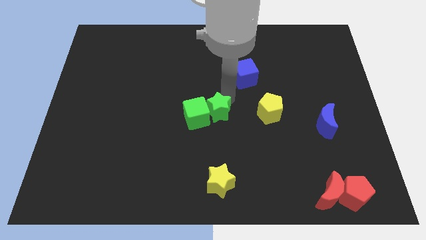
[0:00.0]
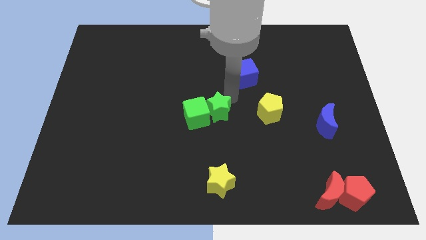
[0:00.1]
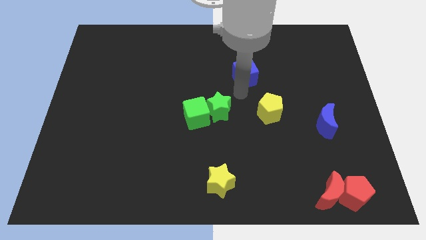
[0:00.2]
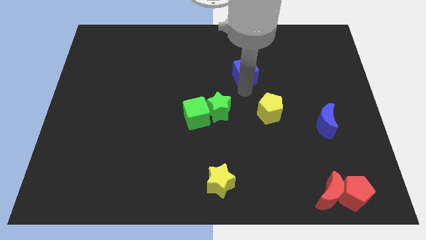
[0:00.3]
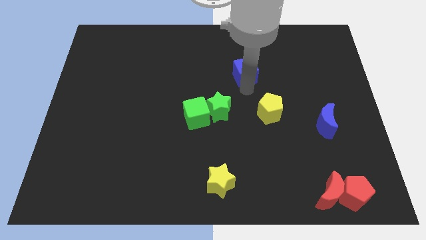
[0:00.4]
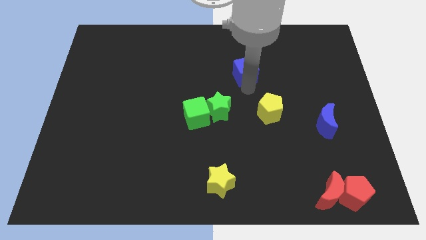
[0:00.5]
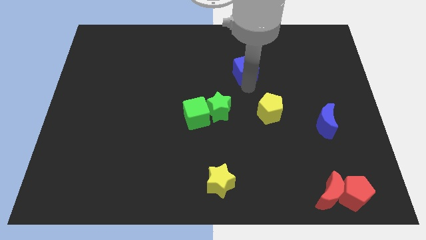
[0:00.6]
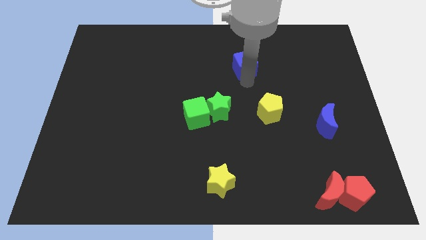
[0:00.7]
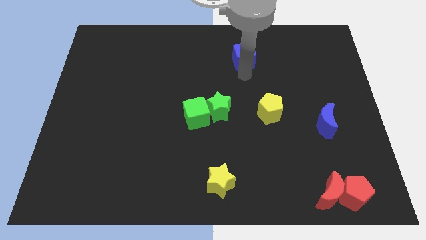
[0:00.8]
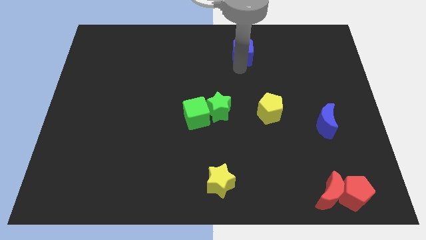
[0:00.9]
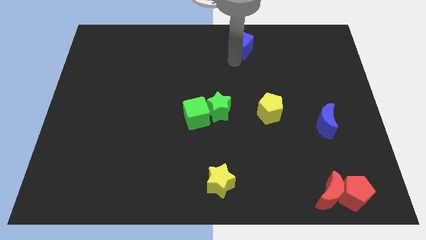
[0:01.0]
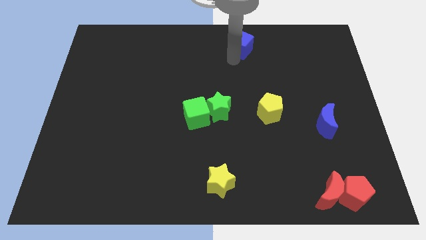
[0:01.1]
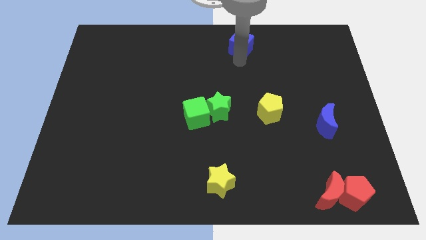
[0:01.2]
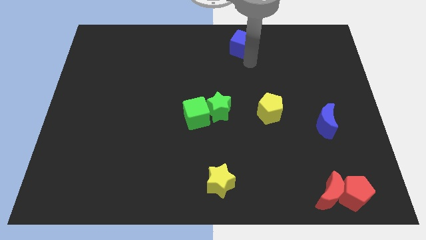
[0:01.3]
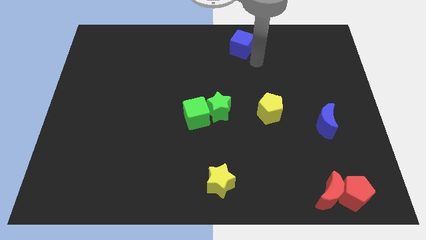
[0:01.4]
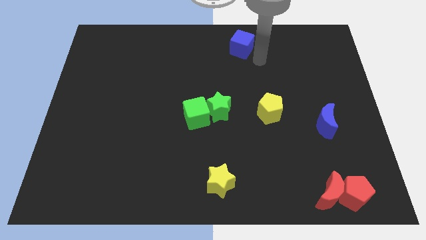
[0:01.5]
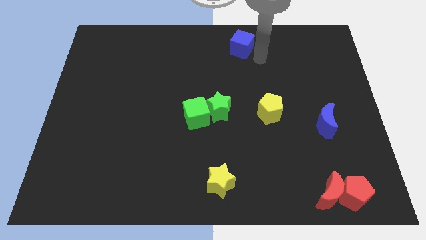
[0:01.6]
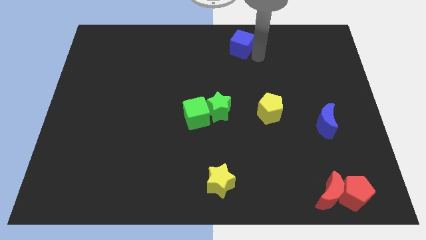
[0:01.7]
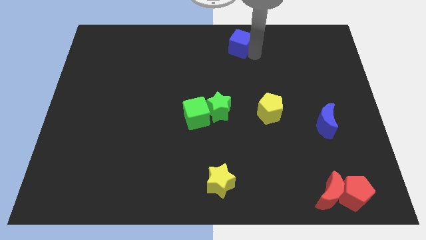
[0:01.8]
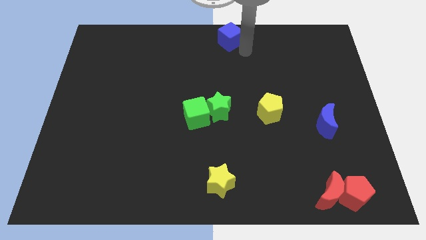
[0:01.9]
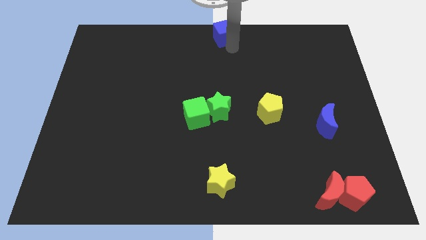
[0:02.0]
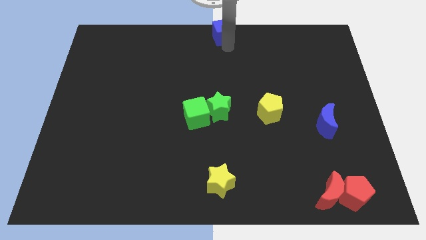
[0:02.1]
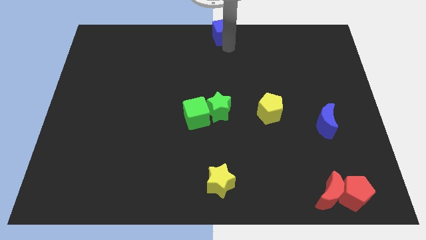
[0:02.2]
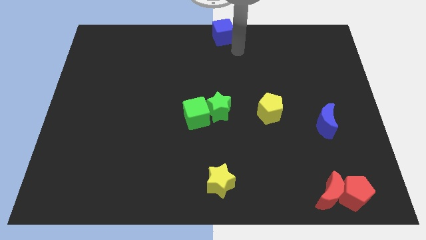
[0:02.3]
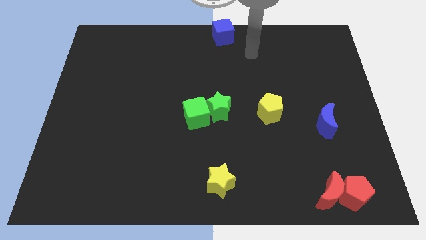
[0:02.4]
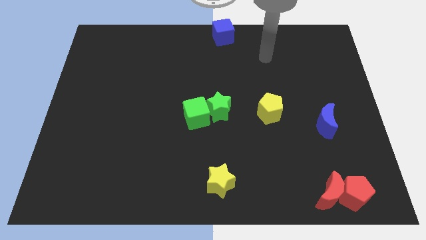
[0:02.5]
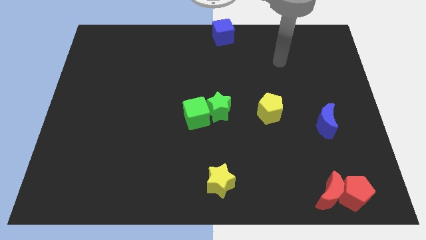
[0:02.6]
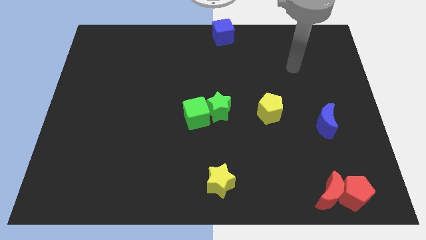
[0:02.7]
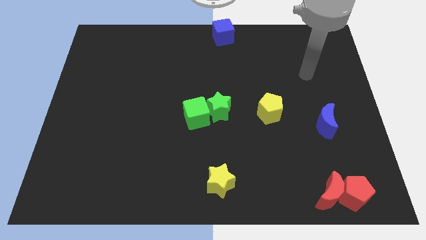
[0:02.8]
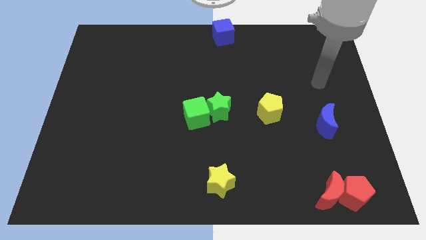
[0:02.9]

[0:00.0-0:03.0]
move your arm away from the green star

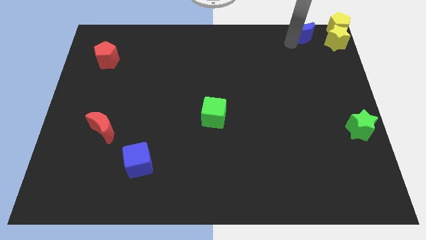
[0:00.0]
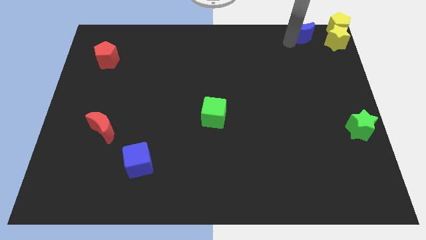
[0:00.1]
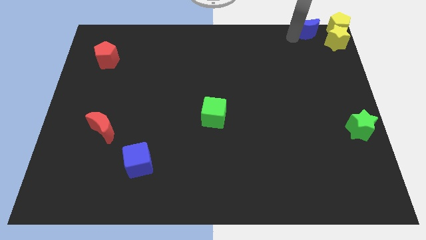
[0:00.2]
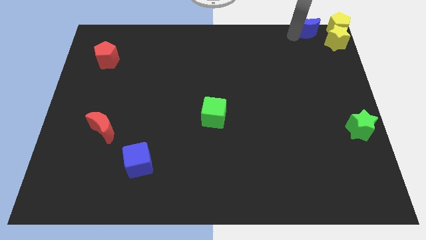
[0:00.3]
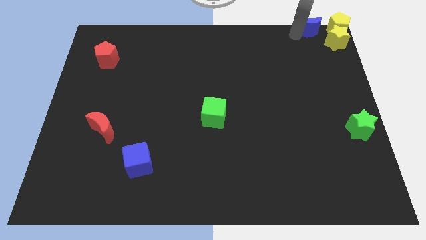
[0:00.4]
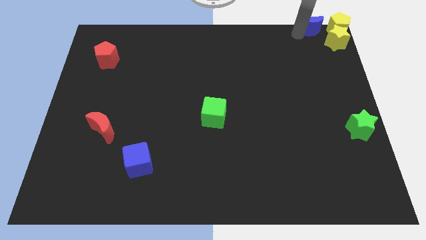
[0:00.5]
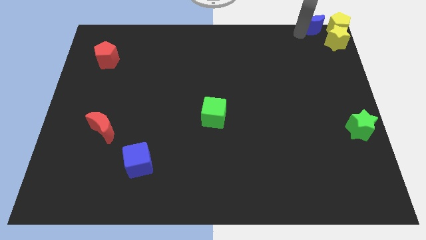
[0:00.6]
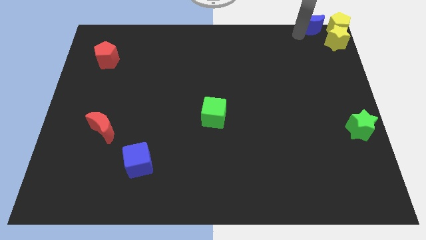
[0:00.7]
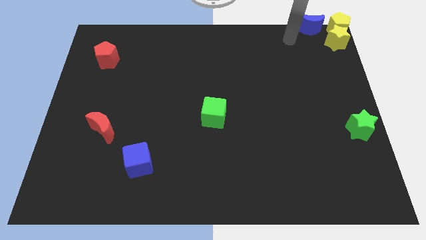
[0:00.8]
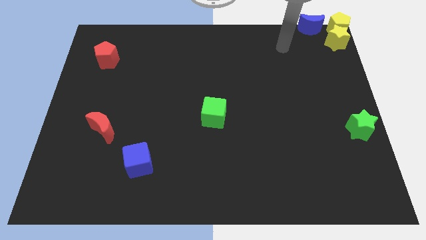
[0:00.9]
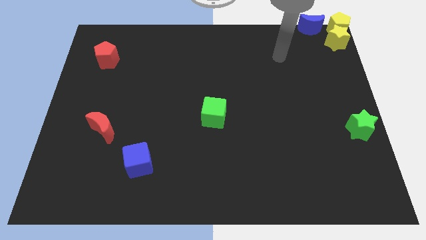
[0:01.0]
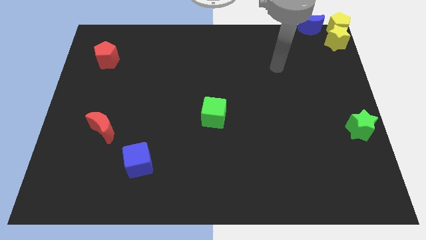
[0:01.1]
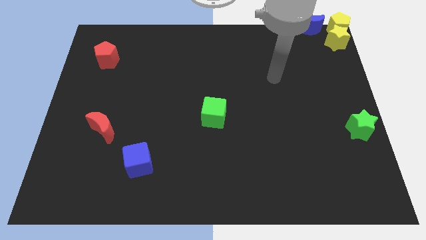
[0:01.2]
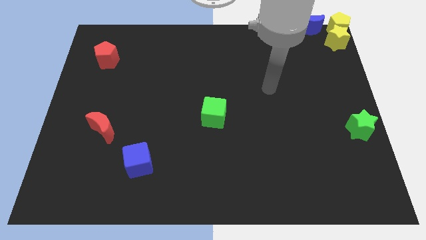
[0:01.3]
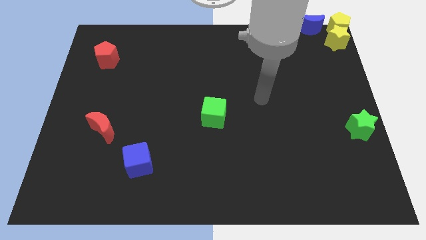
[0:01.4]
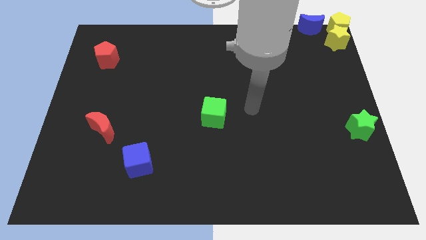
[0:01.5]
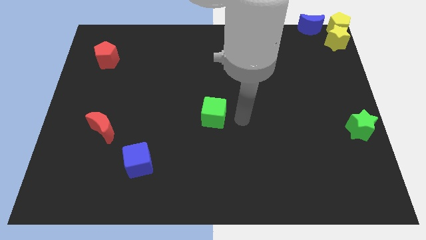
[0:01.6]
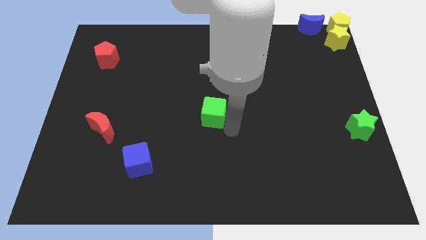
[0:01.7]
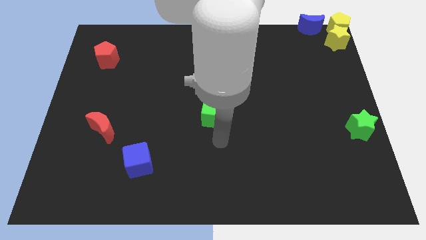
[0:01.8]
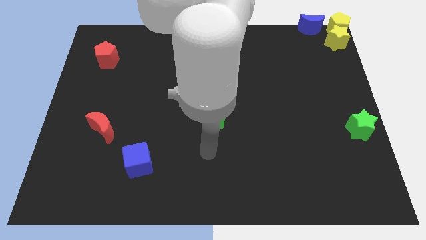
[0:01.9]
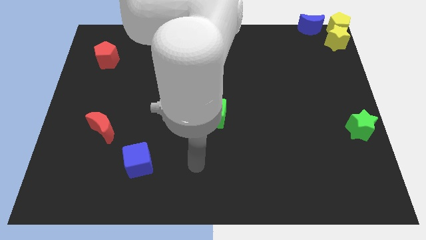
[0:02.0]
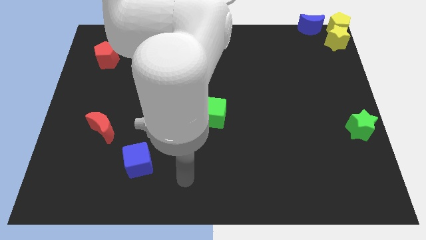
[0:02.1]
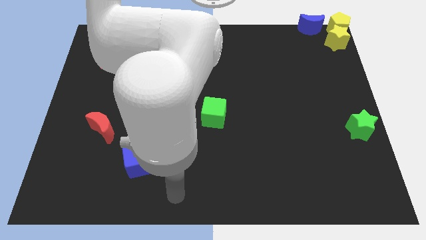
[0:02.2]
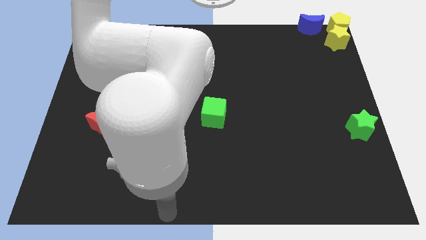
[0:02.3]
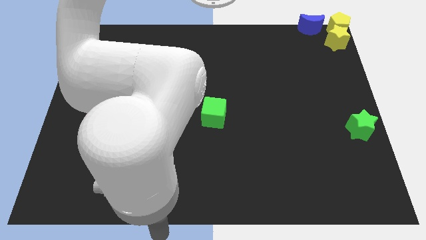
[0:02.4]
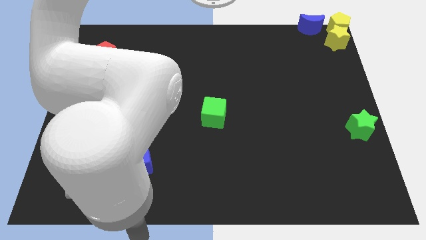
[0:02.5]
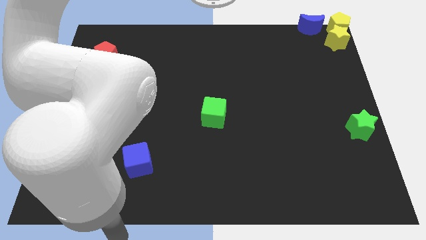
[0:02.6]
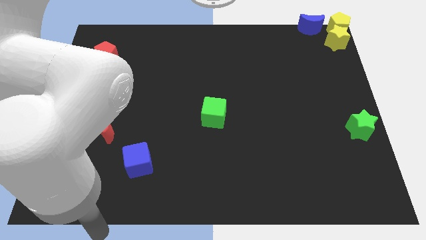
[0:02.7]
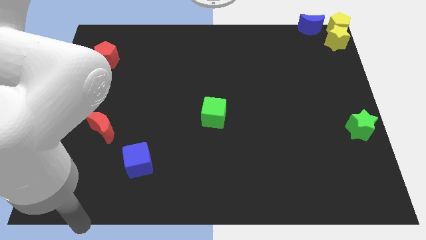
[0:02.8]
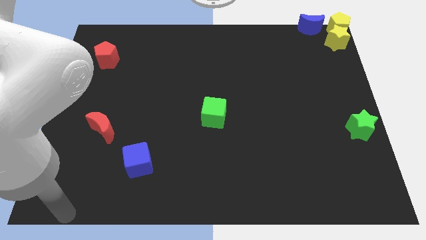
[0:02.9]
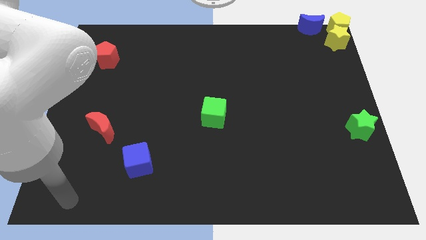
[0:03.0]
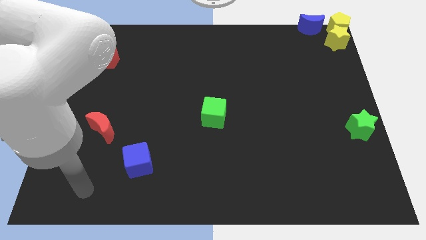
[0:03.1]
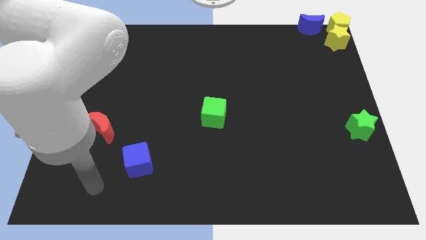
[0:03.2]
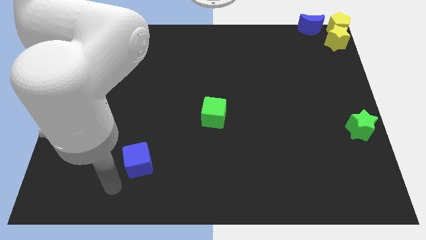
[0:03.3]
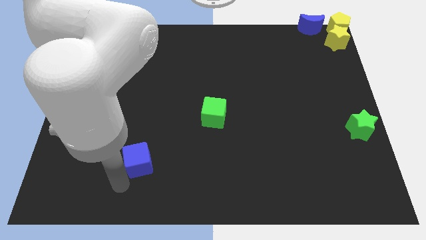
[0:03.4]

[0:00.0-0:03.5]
move away from the blue moon

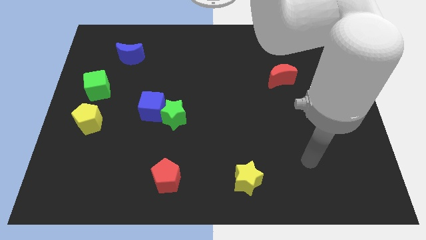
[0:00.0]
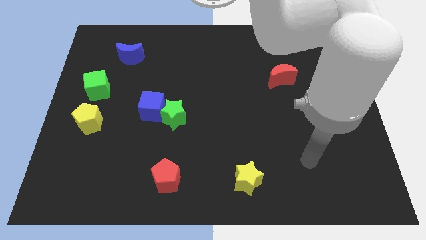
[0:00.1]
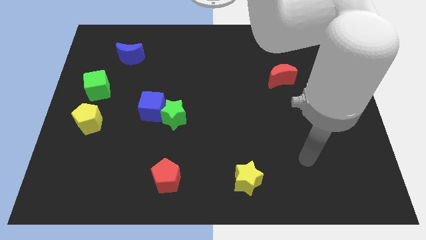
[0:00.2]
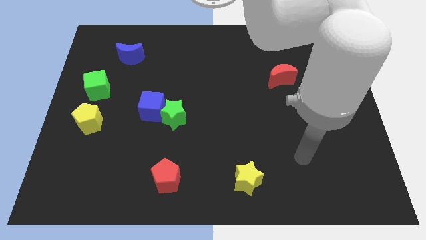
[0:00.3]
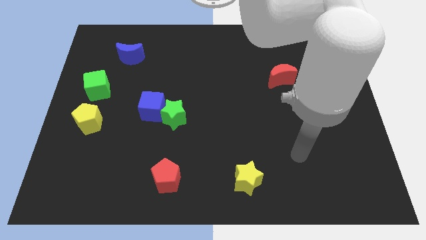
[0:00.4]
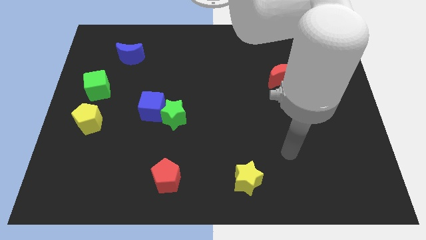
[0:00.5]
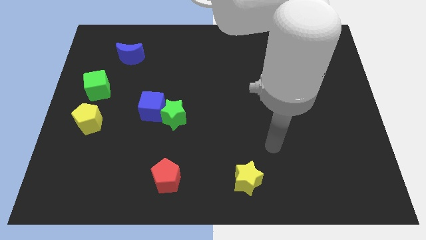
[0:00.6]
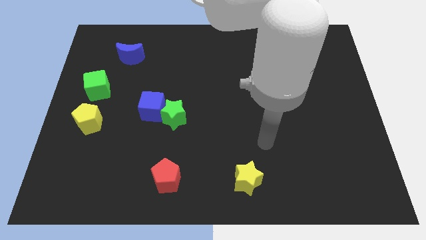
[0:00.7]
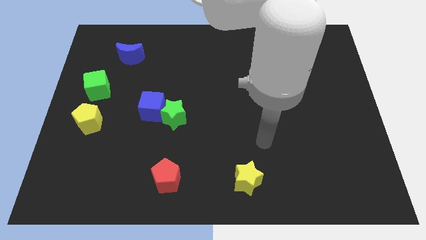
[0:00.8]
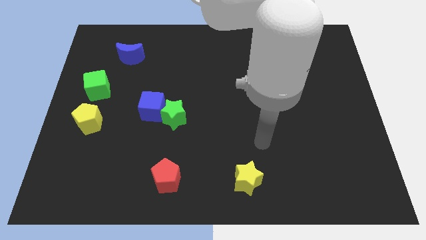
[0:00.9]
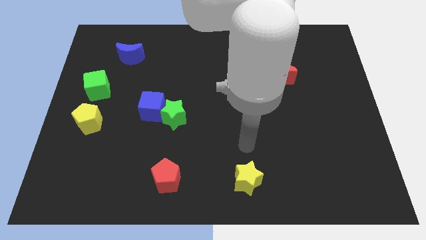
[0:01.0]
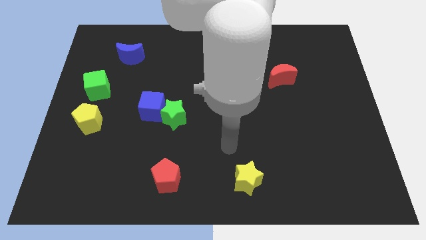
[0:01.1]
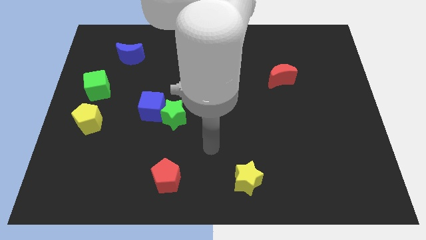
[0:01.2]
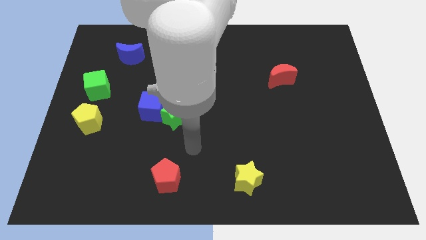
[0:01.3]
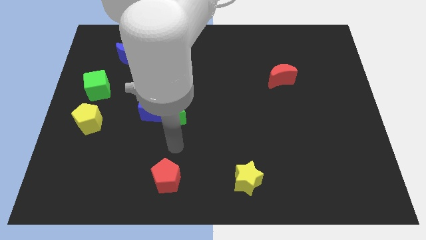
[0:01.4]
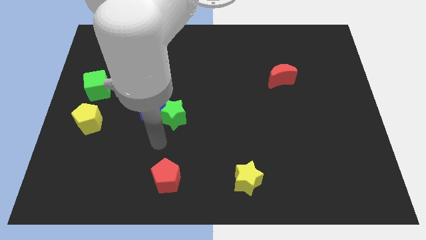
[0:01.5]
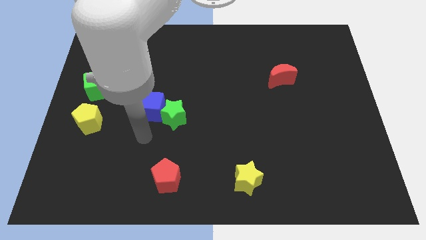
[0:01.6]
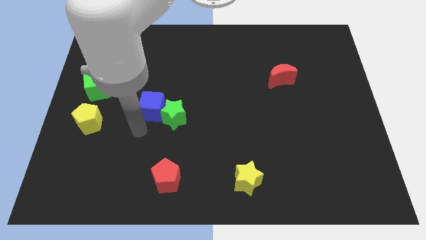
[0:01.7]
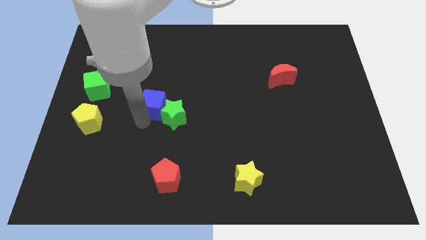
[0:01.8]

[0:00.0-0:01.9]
move your arm to the bottom of blue cube

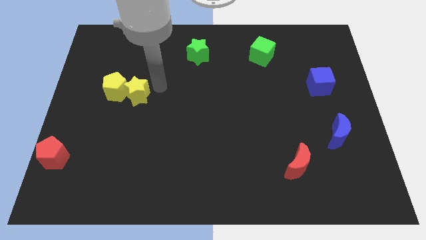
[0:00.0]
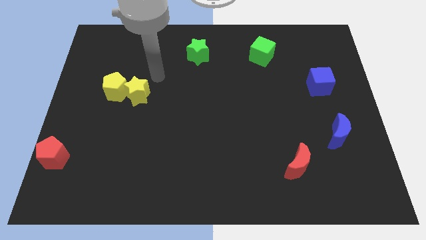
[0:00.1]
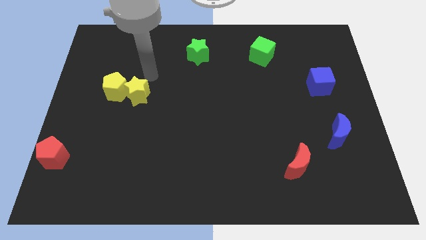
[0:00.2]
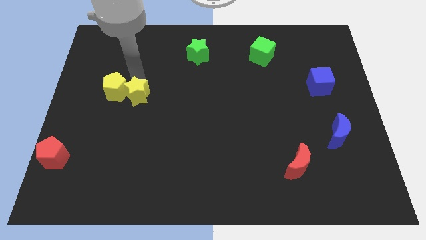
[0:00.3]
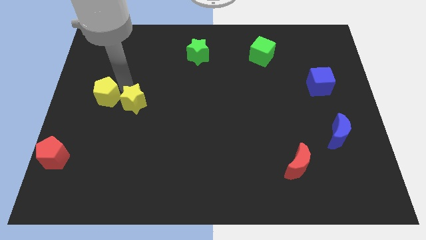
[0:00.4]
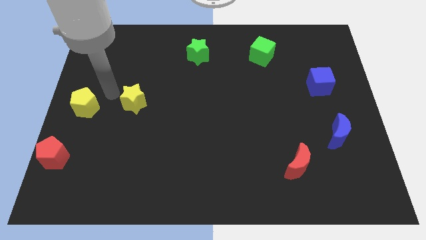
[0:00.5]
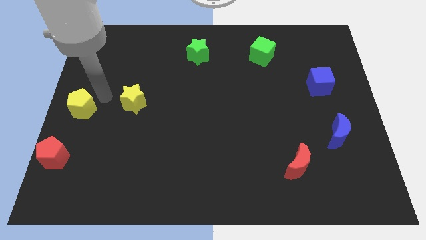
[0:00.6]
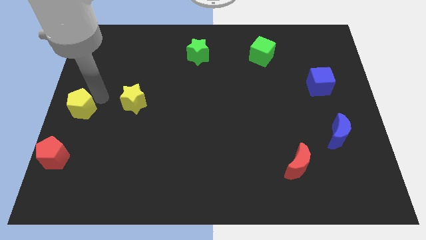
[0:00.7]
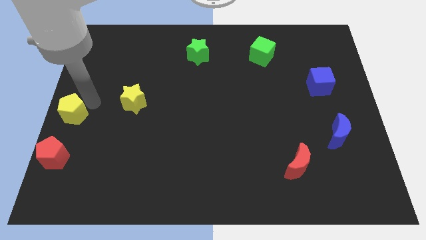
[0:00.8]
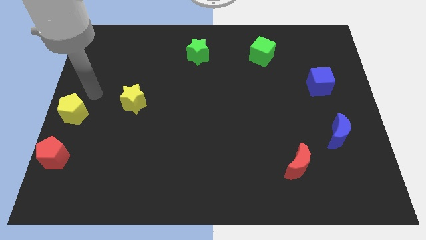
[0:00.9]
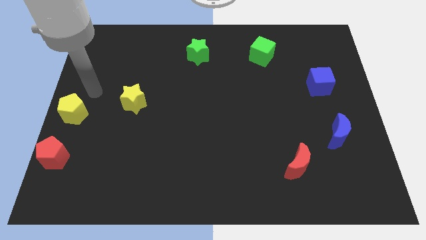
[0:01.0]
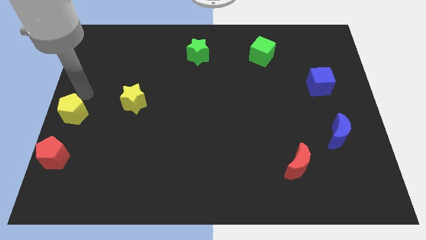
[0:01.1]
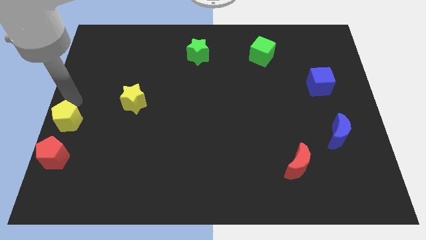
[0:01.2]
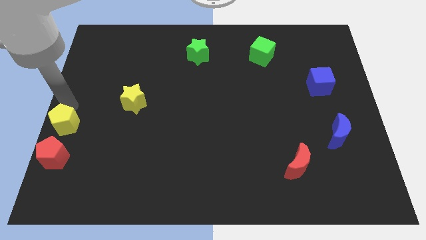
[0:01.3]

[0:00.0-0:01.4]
move yellow pentagon above red pentagon
